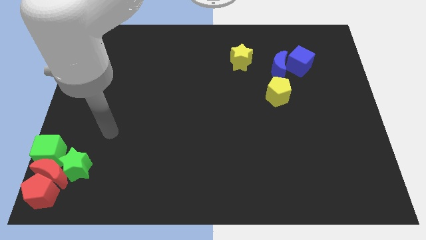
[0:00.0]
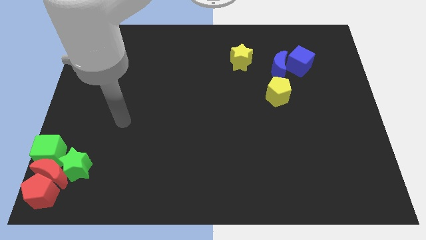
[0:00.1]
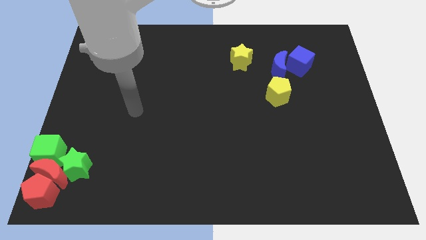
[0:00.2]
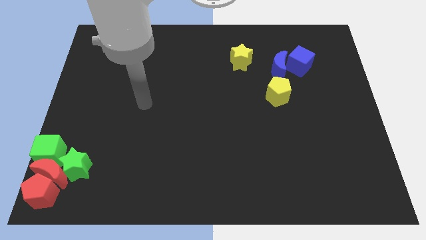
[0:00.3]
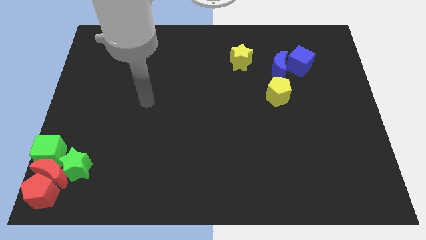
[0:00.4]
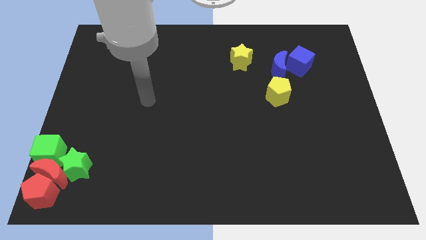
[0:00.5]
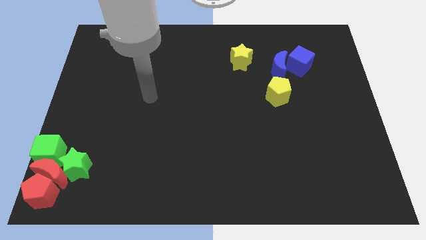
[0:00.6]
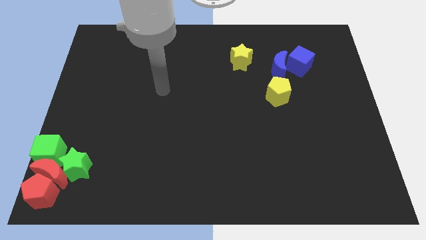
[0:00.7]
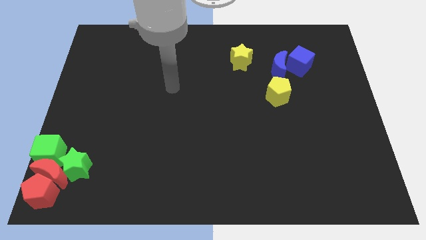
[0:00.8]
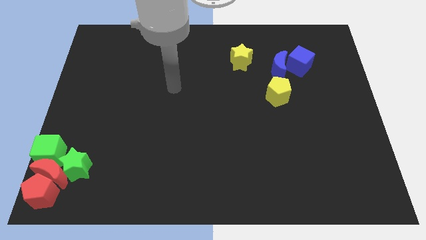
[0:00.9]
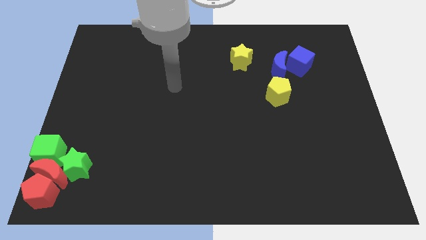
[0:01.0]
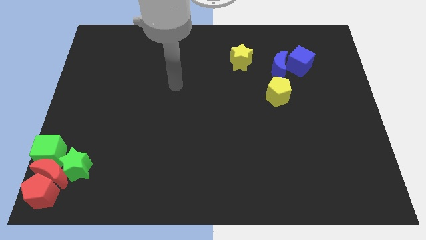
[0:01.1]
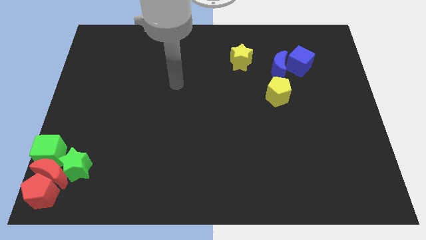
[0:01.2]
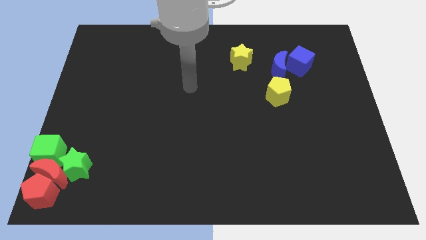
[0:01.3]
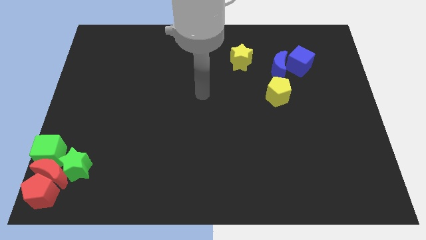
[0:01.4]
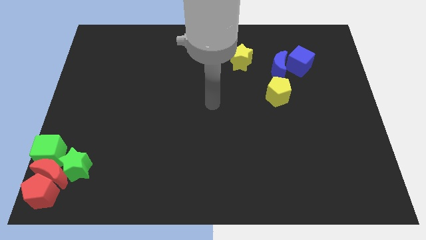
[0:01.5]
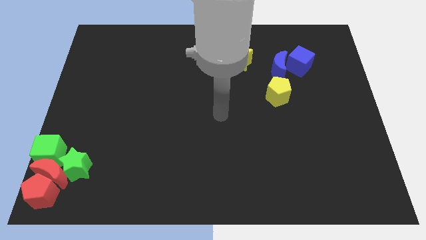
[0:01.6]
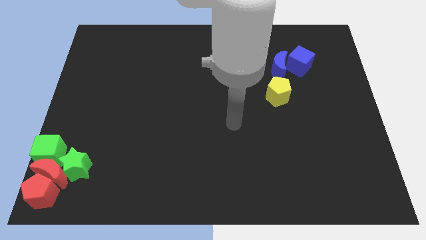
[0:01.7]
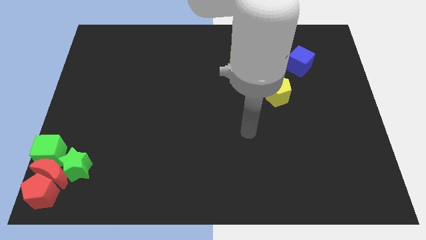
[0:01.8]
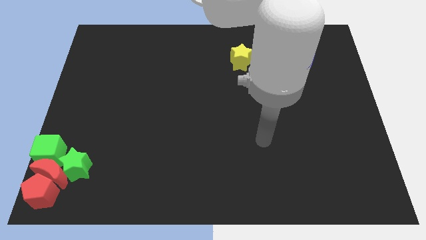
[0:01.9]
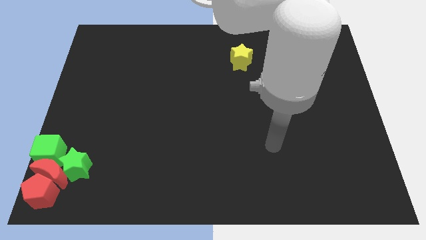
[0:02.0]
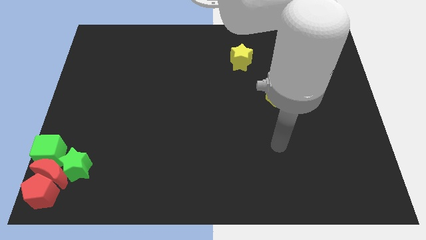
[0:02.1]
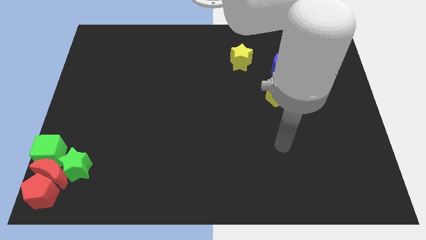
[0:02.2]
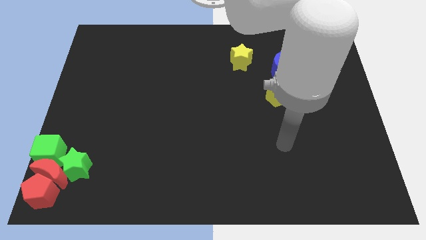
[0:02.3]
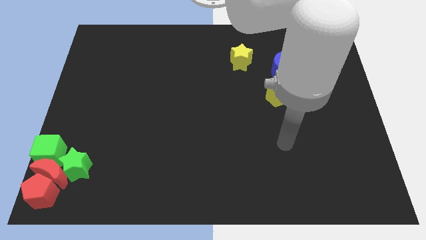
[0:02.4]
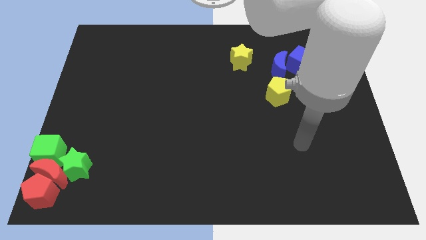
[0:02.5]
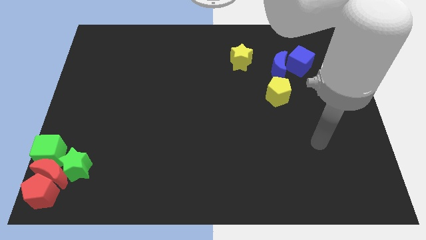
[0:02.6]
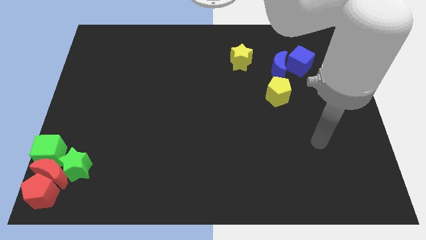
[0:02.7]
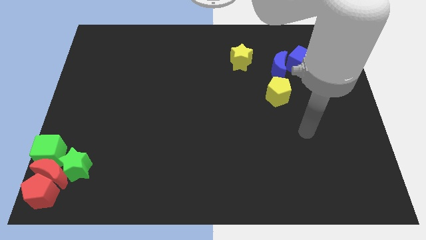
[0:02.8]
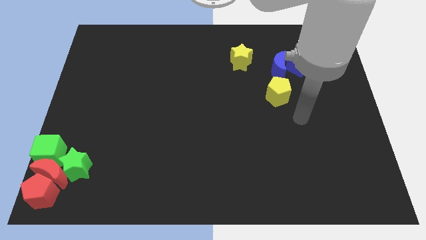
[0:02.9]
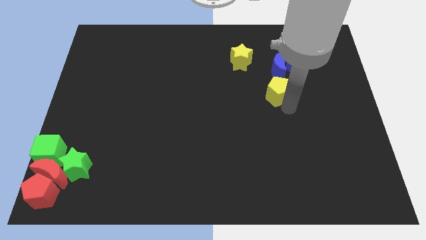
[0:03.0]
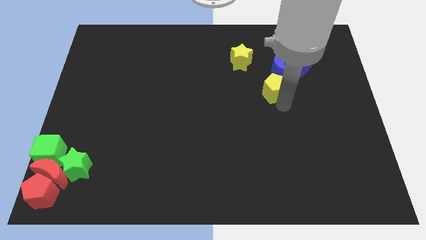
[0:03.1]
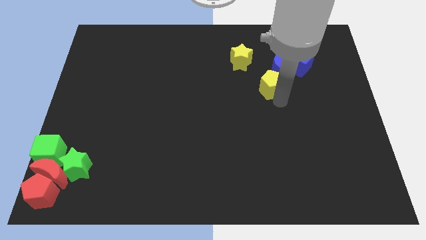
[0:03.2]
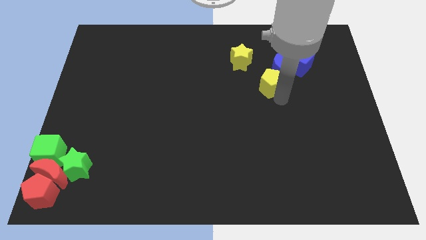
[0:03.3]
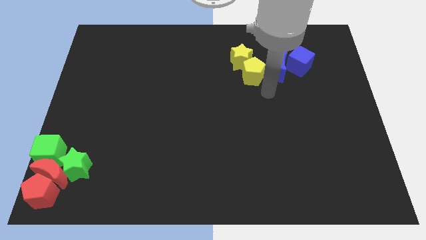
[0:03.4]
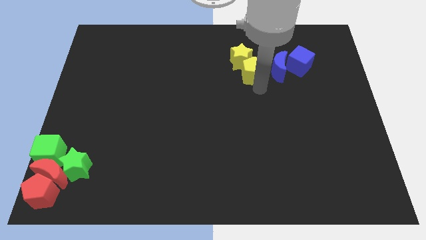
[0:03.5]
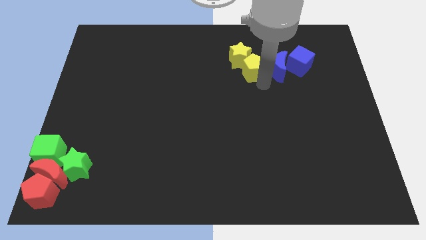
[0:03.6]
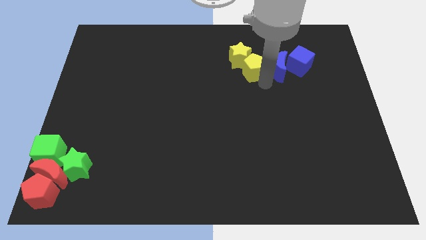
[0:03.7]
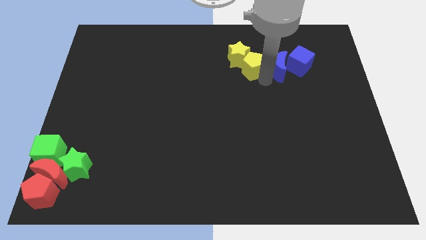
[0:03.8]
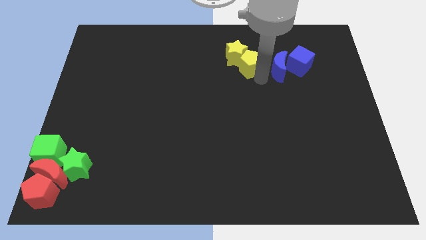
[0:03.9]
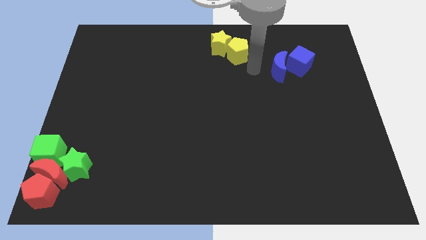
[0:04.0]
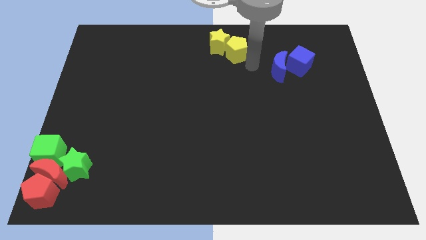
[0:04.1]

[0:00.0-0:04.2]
move the yellow star and the yellow pentagon towards the top center

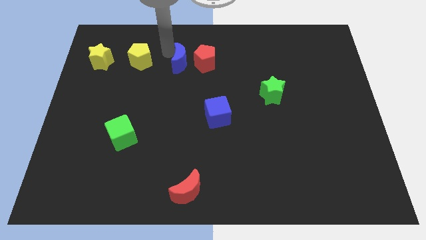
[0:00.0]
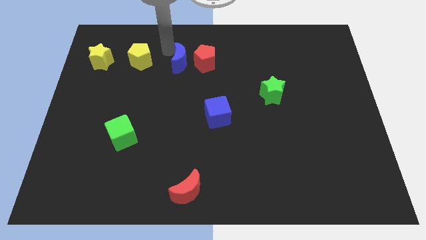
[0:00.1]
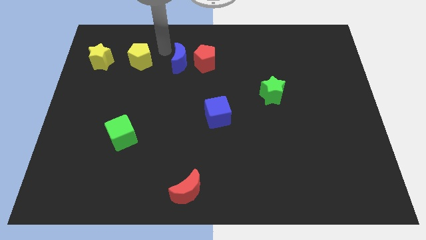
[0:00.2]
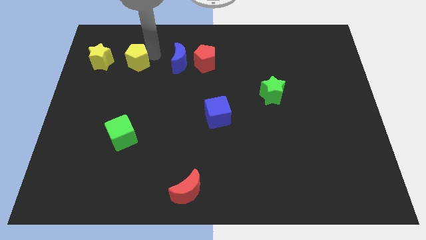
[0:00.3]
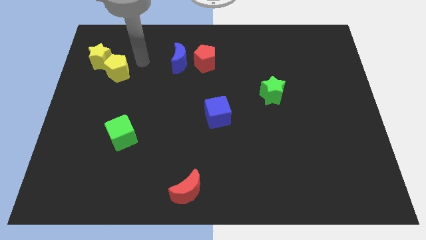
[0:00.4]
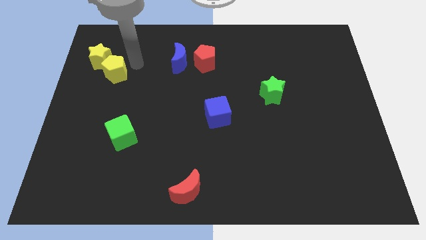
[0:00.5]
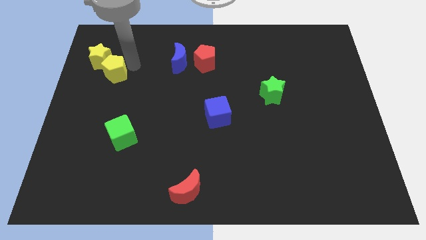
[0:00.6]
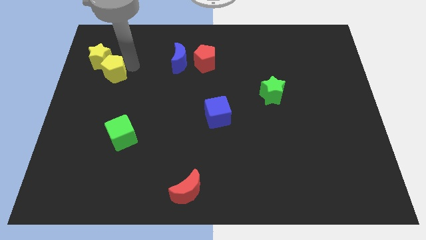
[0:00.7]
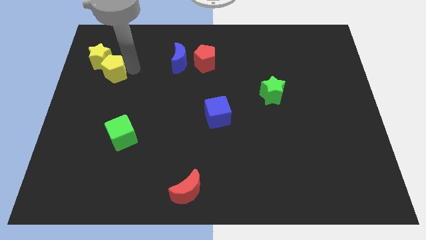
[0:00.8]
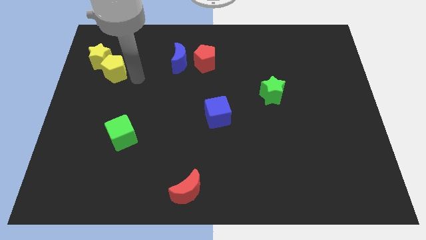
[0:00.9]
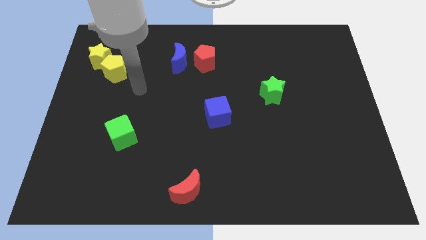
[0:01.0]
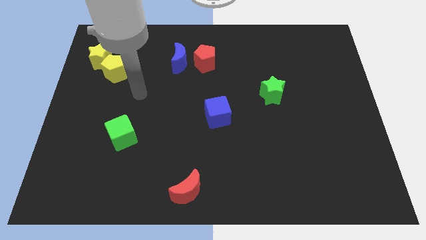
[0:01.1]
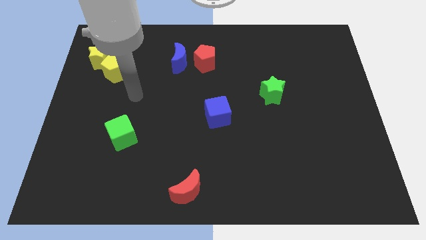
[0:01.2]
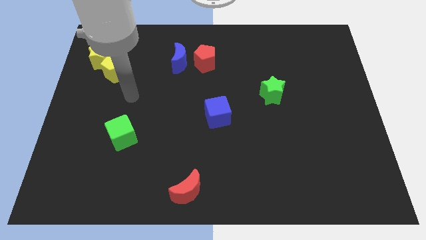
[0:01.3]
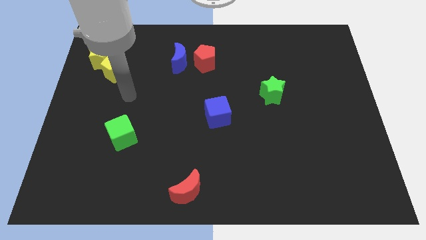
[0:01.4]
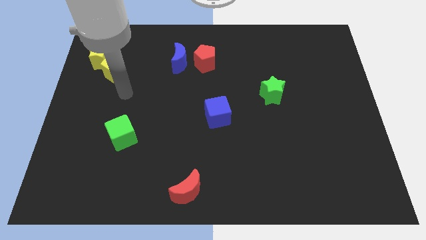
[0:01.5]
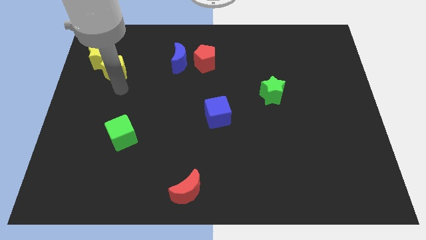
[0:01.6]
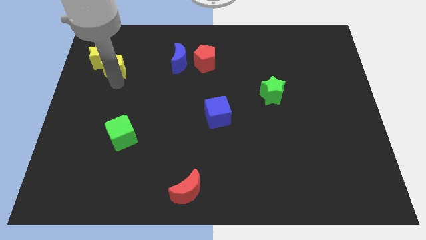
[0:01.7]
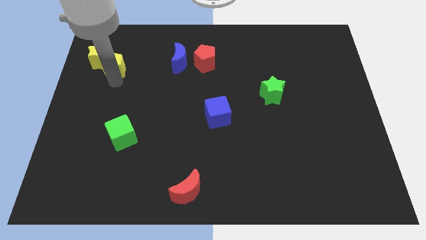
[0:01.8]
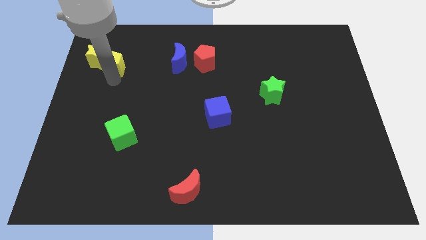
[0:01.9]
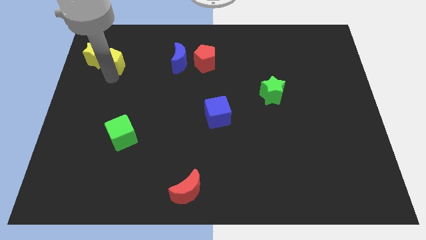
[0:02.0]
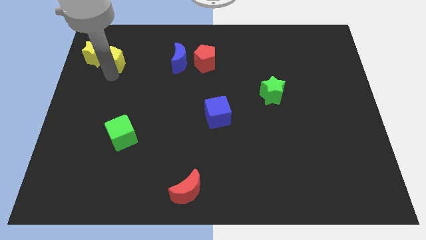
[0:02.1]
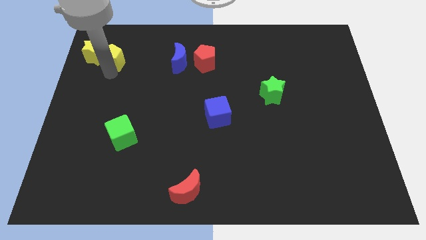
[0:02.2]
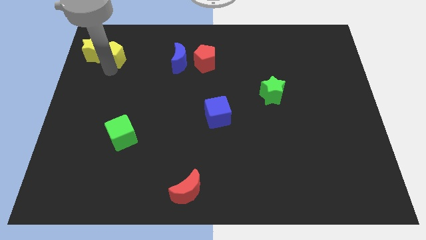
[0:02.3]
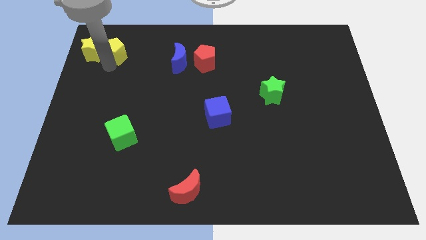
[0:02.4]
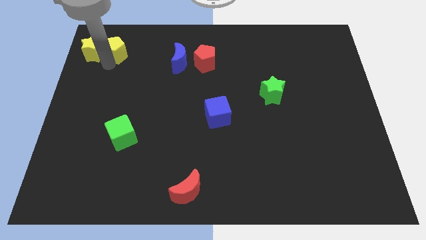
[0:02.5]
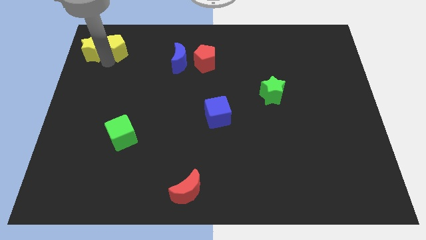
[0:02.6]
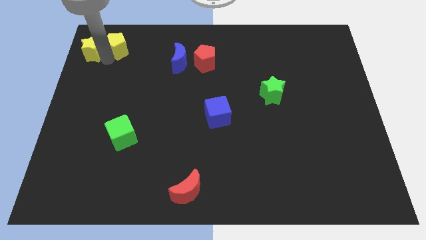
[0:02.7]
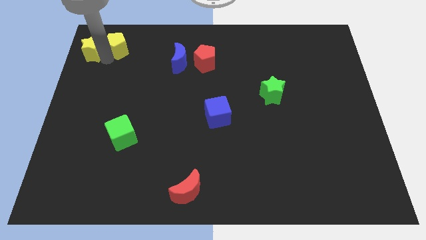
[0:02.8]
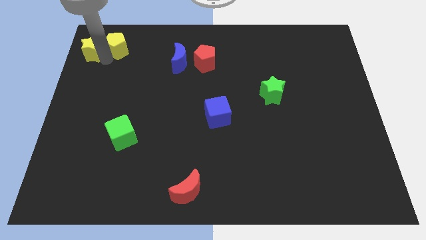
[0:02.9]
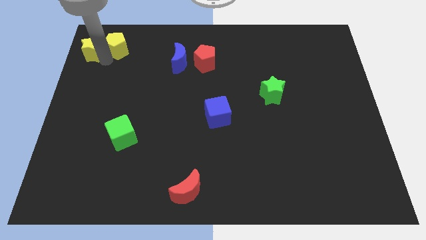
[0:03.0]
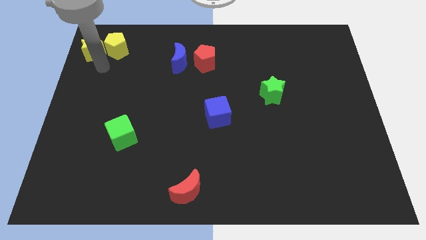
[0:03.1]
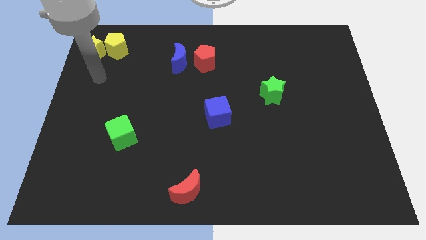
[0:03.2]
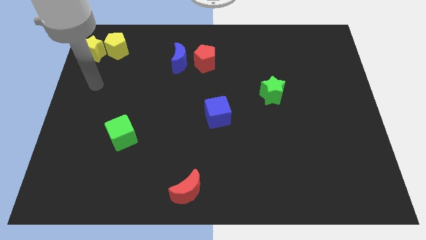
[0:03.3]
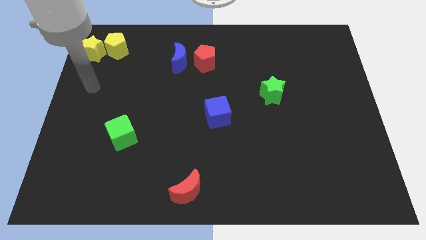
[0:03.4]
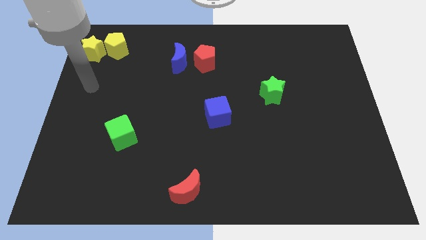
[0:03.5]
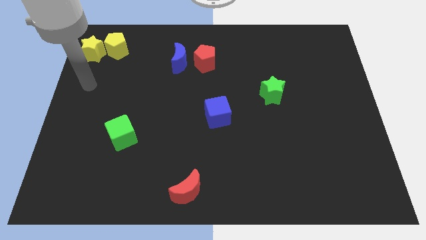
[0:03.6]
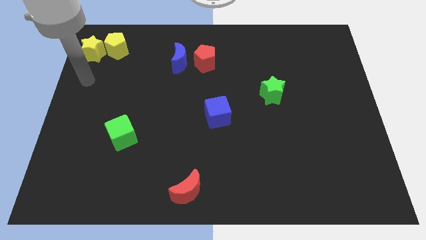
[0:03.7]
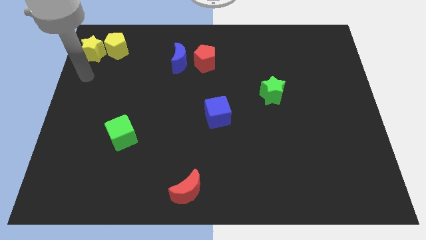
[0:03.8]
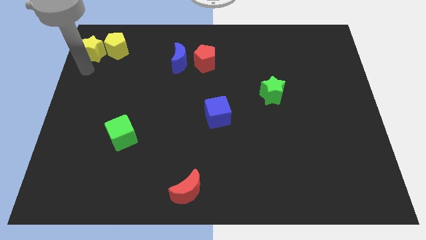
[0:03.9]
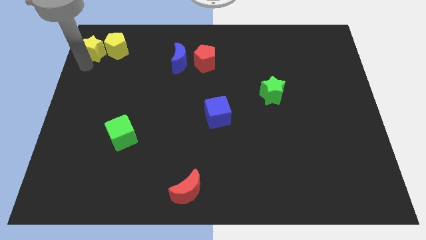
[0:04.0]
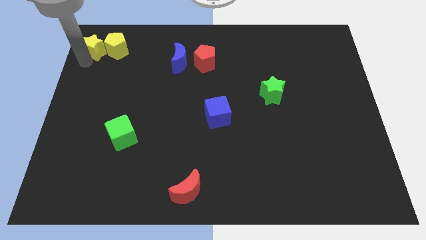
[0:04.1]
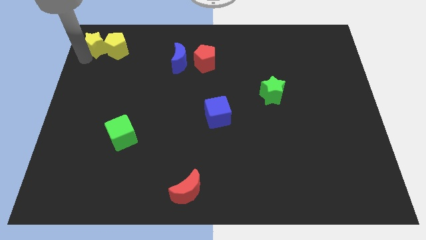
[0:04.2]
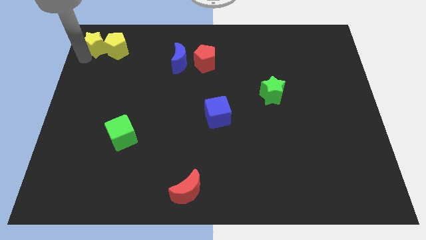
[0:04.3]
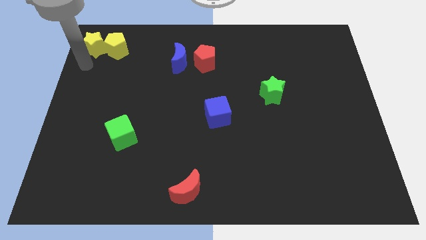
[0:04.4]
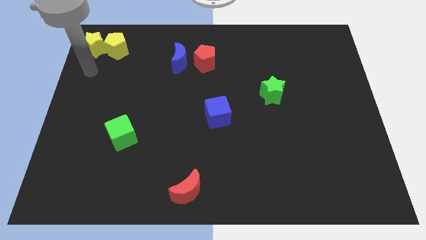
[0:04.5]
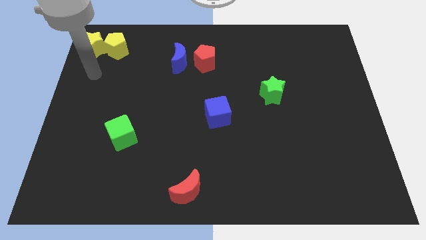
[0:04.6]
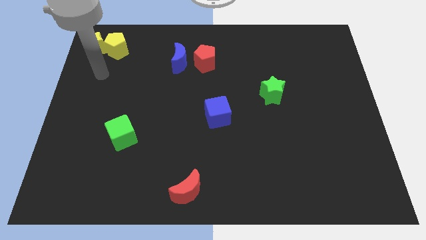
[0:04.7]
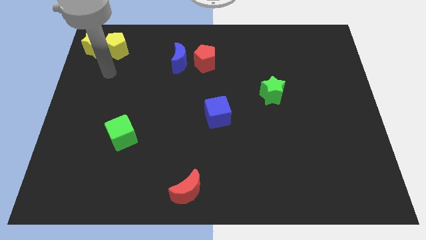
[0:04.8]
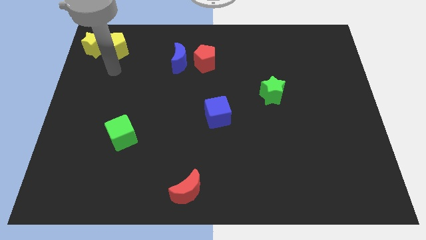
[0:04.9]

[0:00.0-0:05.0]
move yellow blocks slightly left
